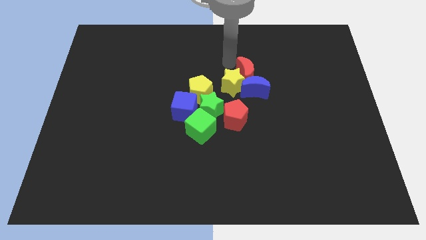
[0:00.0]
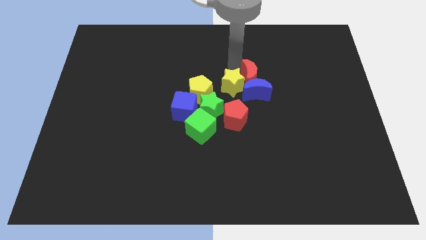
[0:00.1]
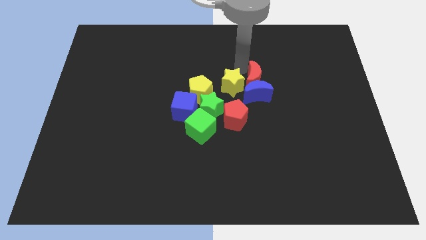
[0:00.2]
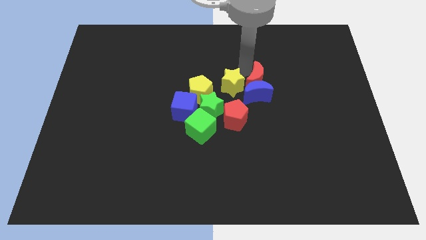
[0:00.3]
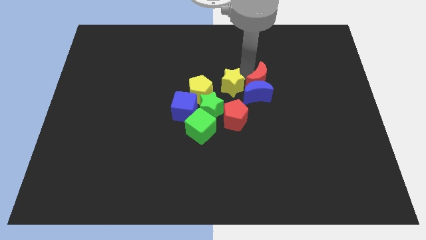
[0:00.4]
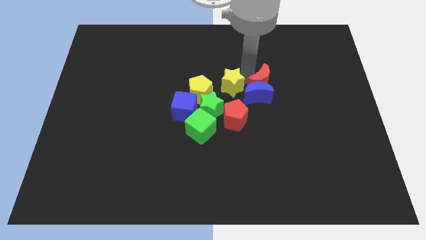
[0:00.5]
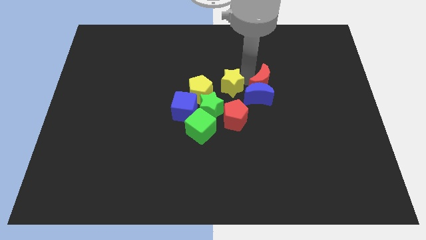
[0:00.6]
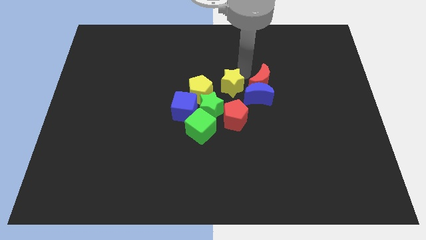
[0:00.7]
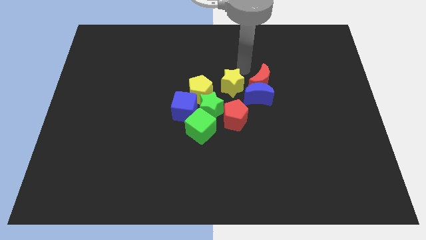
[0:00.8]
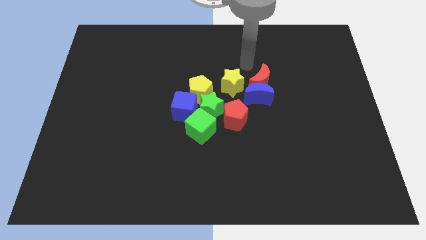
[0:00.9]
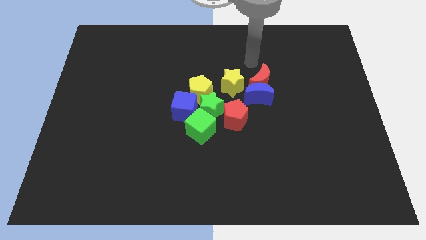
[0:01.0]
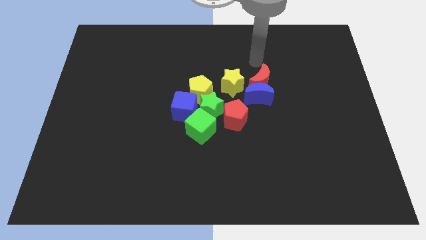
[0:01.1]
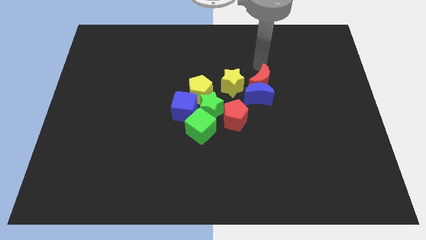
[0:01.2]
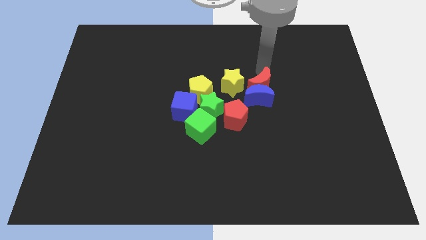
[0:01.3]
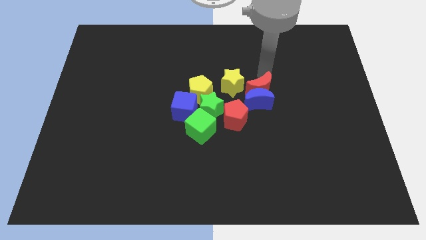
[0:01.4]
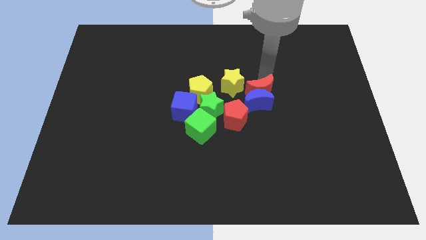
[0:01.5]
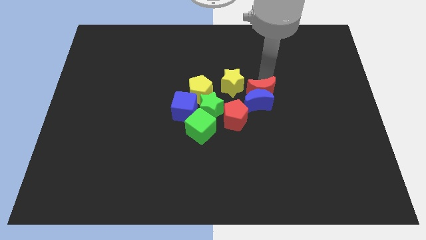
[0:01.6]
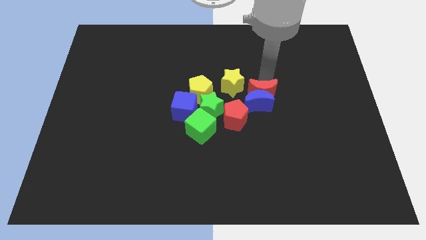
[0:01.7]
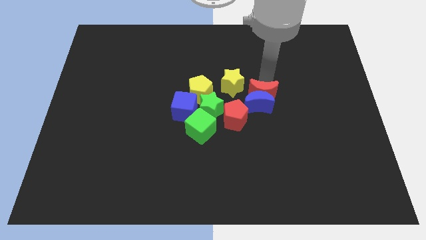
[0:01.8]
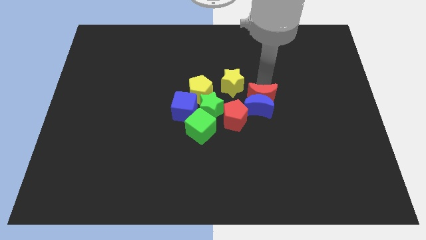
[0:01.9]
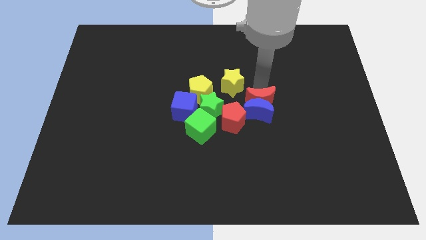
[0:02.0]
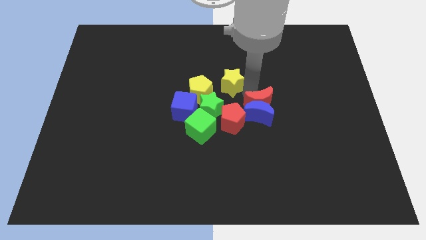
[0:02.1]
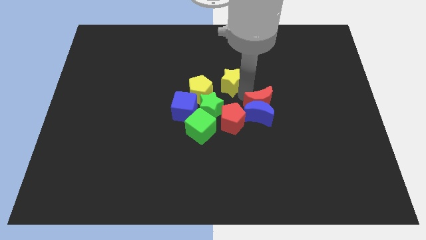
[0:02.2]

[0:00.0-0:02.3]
move the red crecent downwards slightly

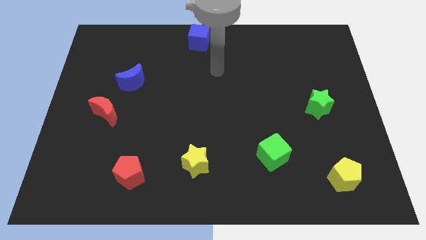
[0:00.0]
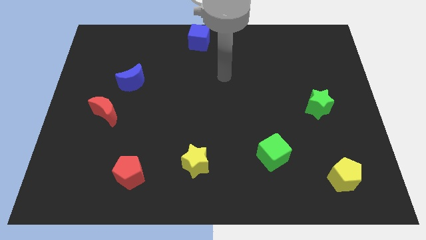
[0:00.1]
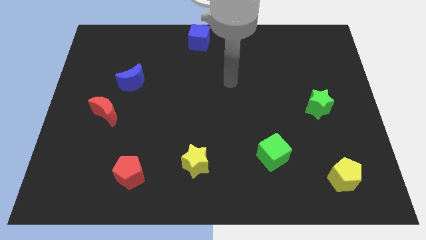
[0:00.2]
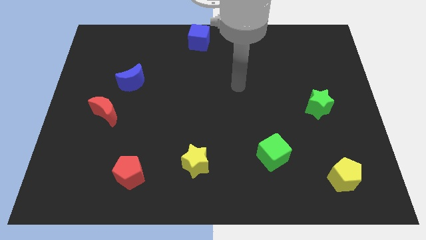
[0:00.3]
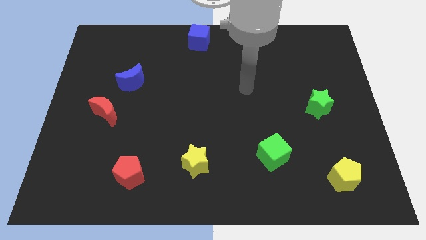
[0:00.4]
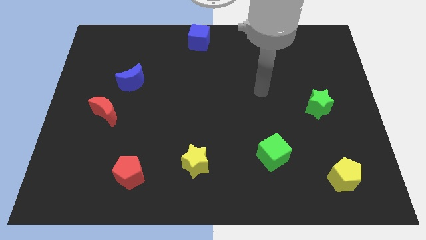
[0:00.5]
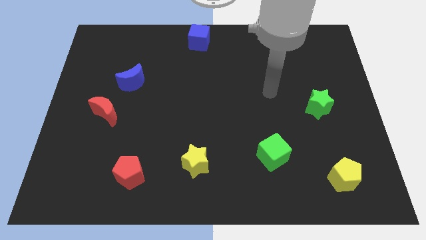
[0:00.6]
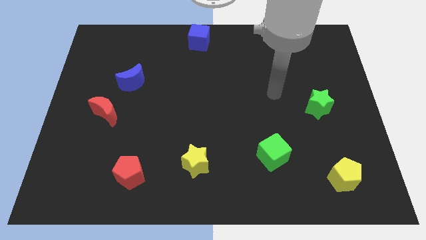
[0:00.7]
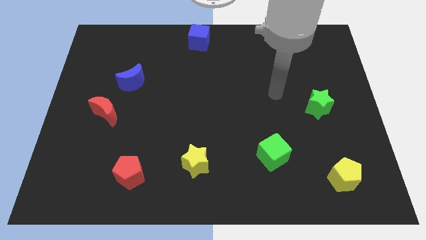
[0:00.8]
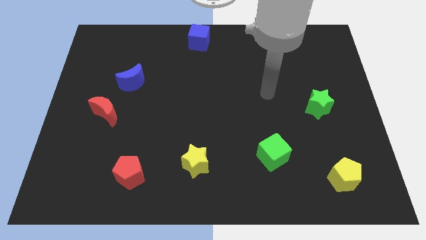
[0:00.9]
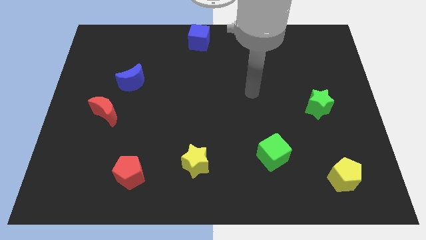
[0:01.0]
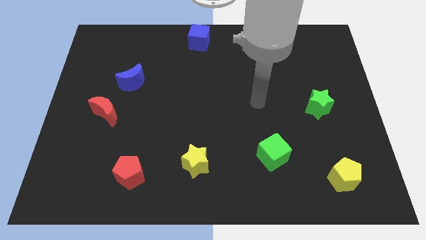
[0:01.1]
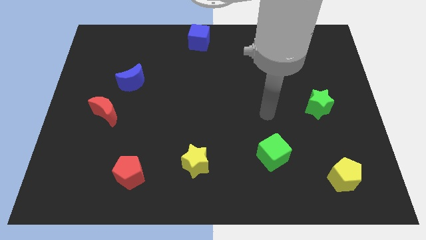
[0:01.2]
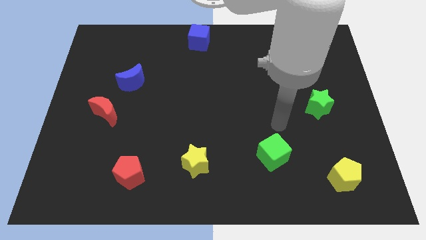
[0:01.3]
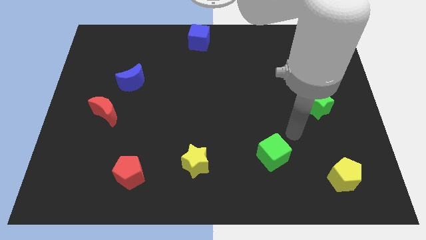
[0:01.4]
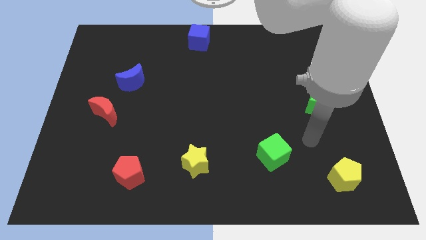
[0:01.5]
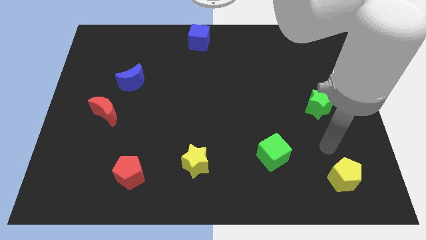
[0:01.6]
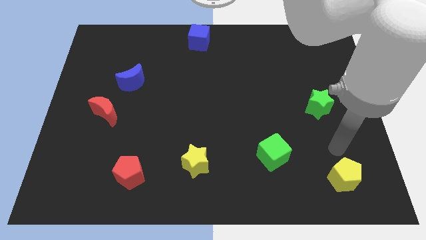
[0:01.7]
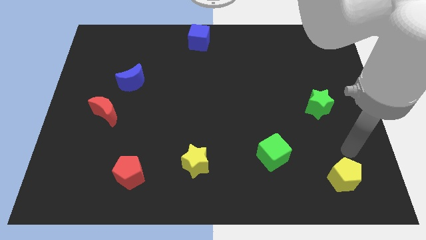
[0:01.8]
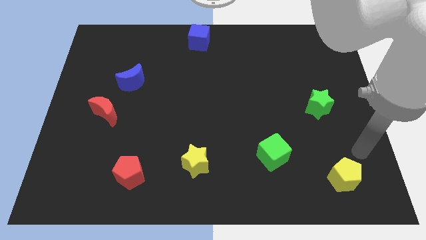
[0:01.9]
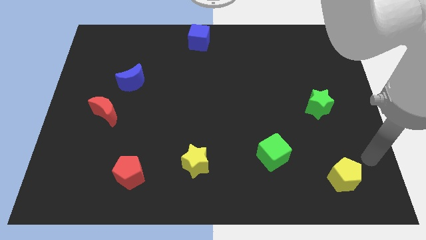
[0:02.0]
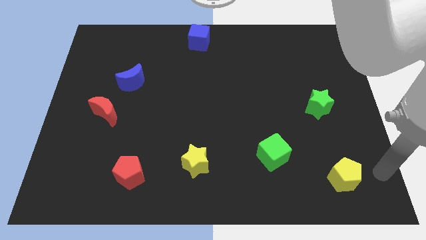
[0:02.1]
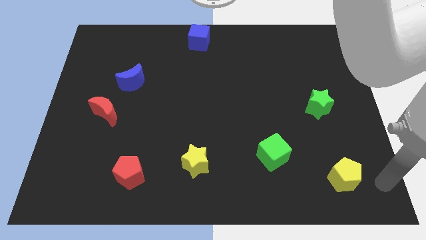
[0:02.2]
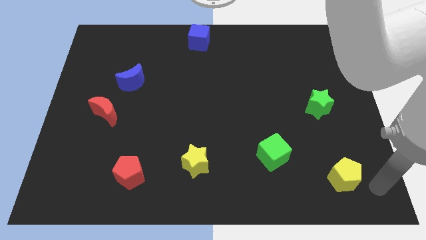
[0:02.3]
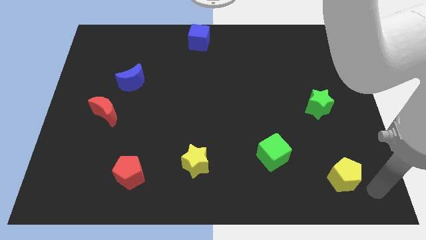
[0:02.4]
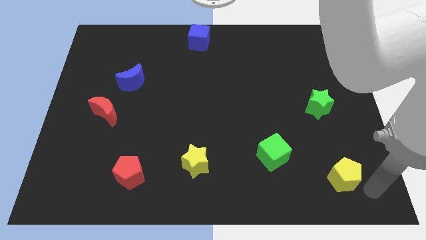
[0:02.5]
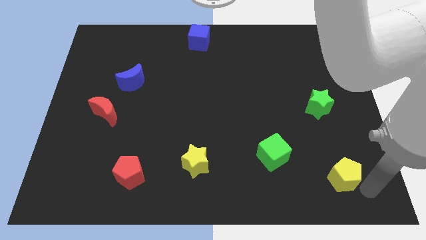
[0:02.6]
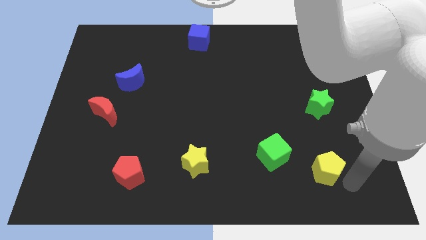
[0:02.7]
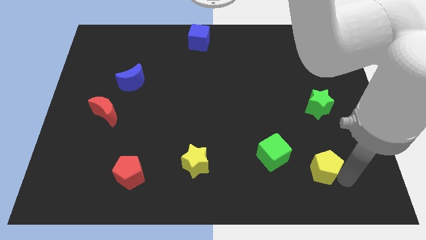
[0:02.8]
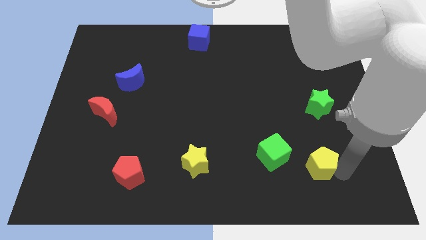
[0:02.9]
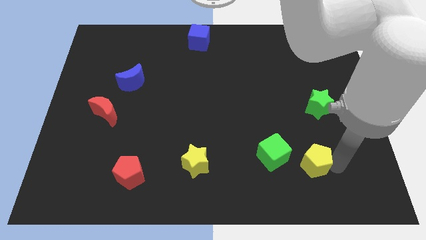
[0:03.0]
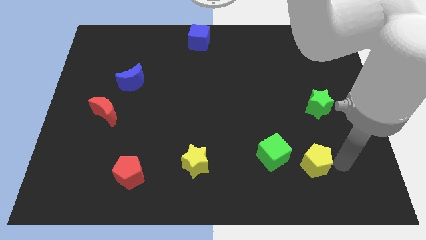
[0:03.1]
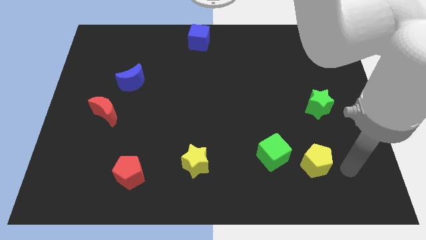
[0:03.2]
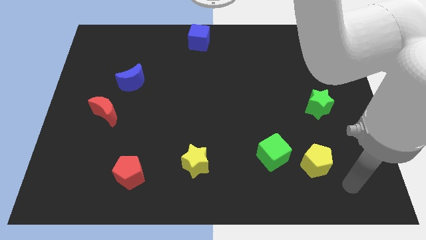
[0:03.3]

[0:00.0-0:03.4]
place the yellow pentagon to the right of the green cube

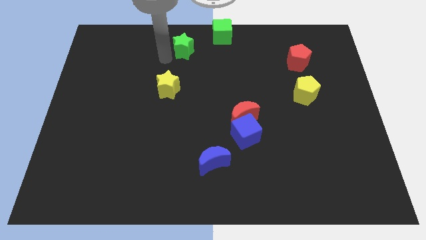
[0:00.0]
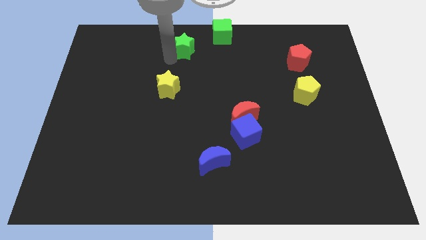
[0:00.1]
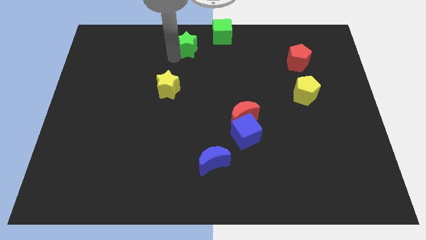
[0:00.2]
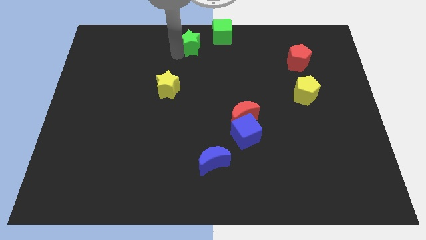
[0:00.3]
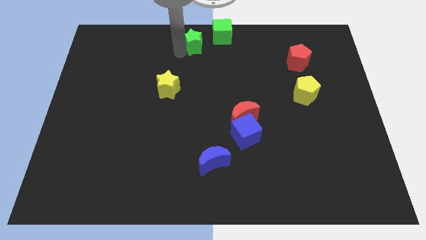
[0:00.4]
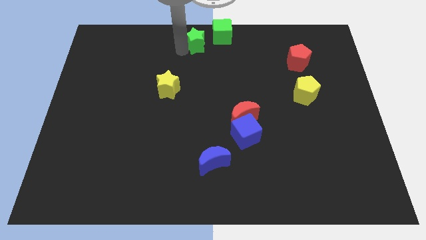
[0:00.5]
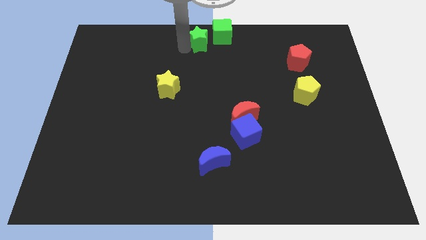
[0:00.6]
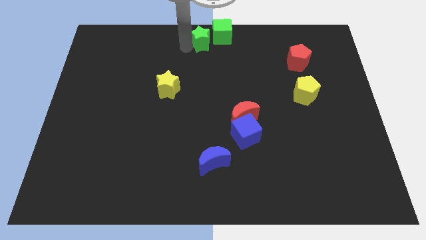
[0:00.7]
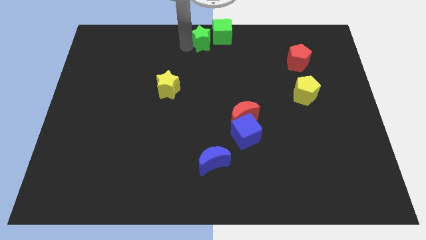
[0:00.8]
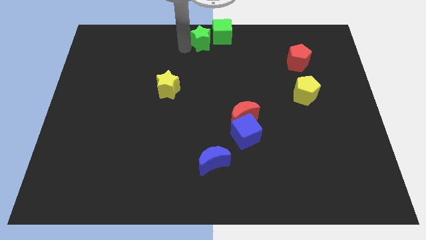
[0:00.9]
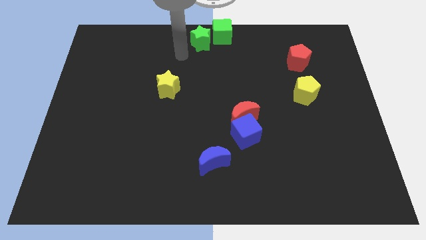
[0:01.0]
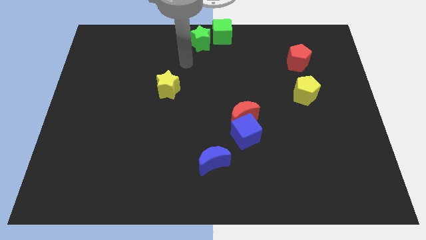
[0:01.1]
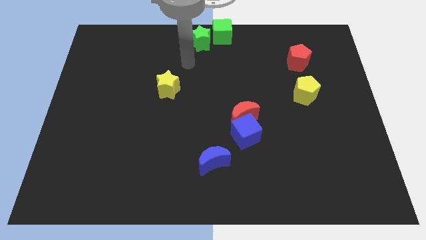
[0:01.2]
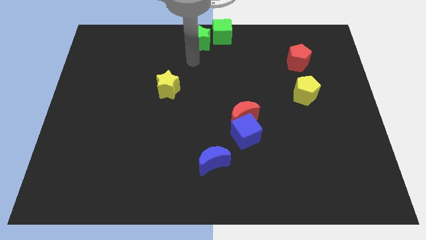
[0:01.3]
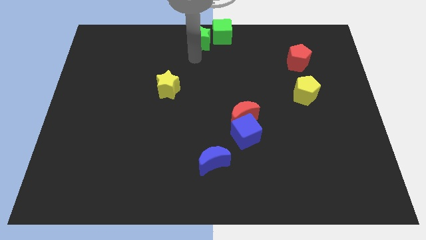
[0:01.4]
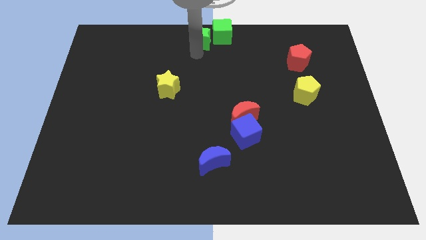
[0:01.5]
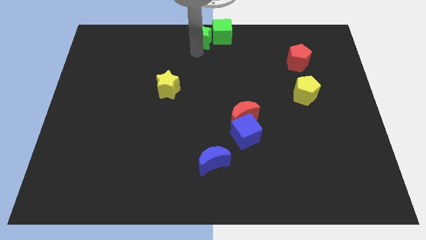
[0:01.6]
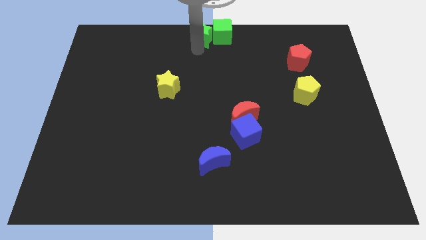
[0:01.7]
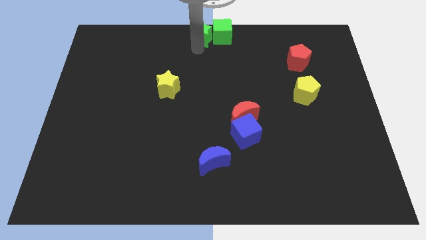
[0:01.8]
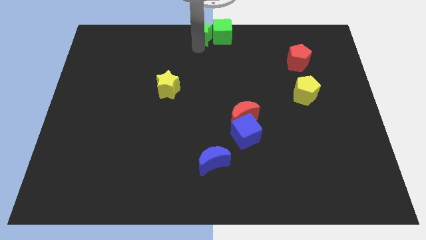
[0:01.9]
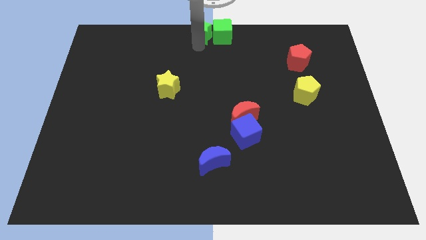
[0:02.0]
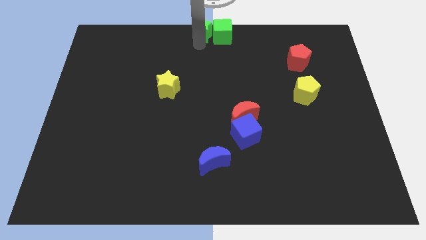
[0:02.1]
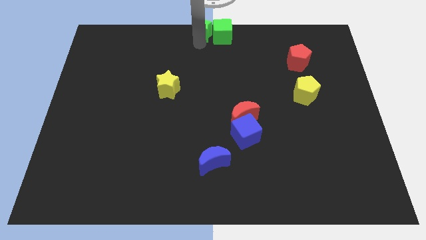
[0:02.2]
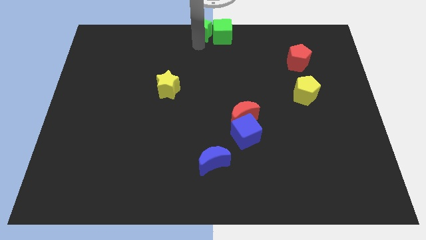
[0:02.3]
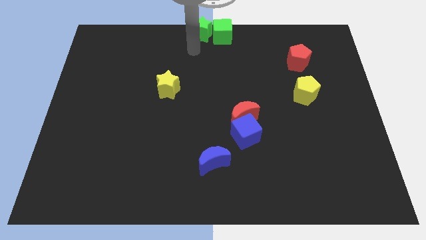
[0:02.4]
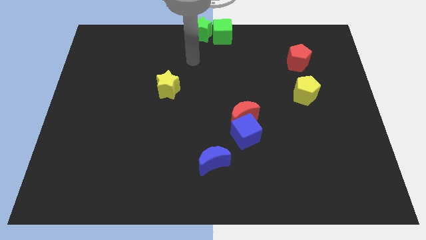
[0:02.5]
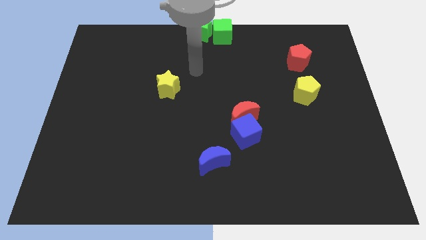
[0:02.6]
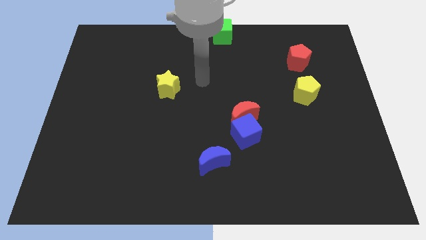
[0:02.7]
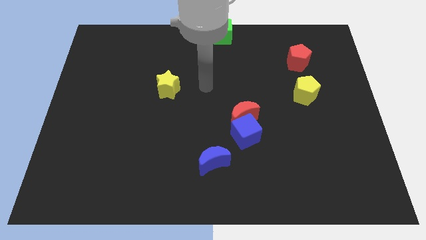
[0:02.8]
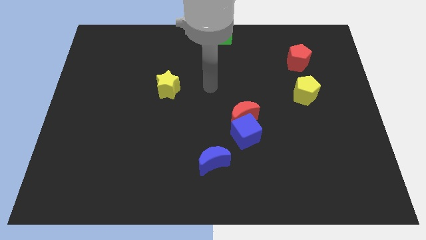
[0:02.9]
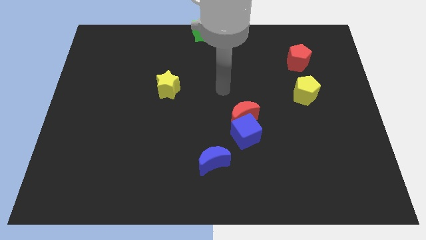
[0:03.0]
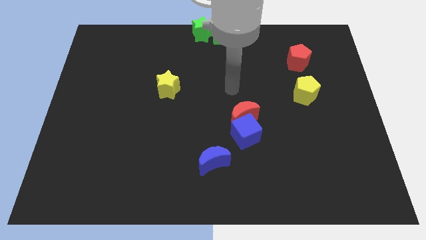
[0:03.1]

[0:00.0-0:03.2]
place the green star left to the green cube

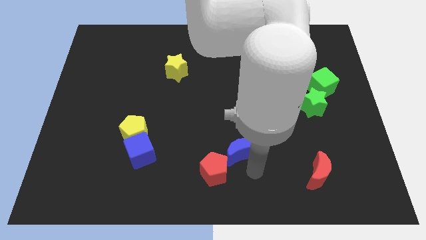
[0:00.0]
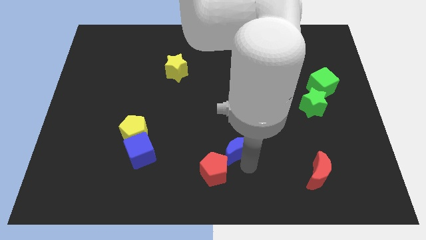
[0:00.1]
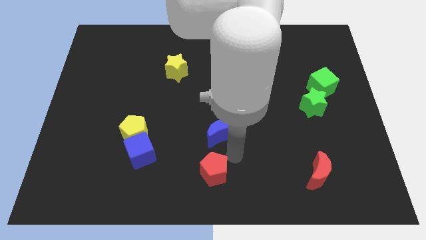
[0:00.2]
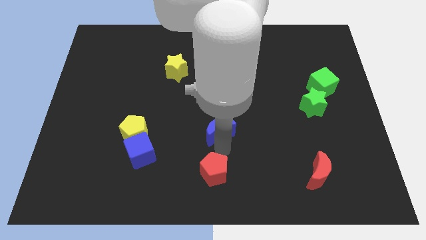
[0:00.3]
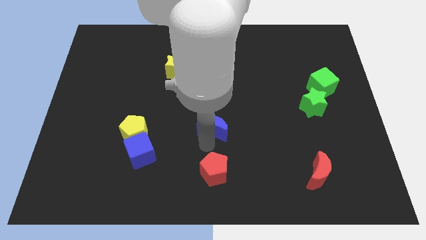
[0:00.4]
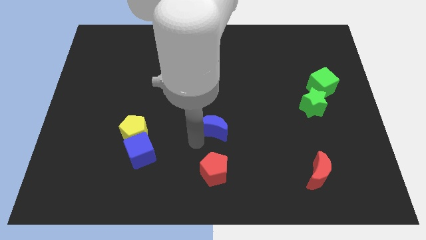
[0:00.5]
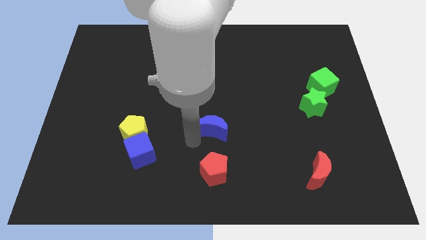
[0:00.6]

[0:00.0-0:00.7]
move the blue crescent above the red pentagon
